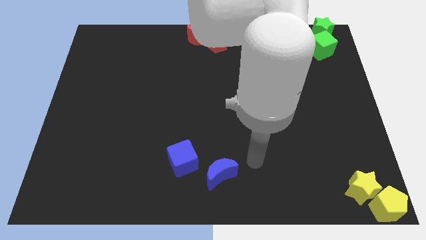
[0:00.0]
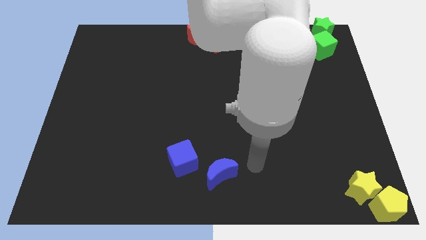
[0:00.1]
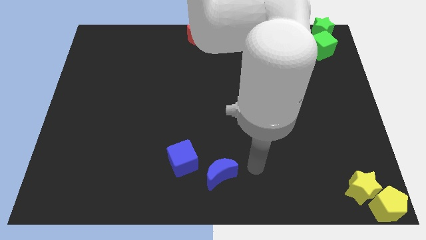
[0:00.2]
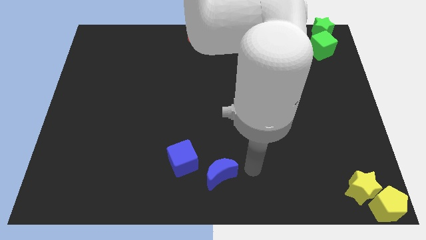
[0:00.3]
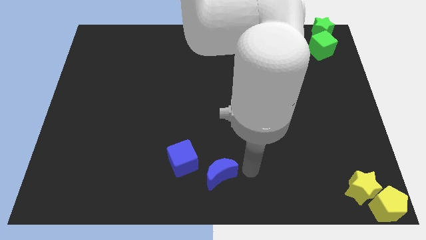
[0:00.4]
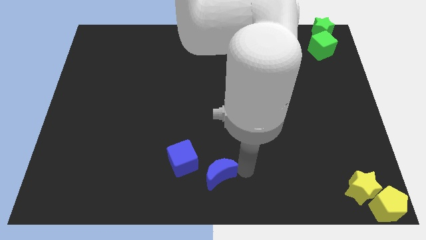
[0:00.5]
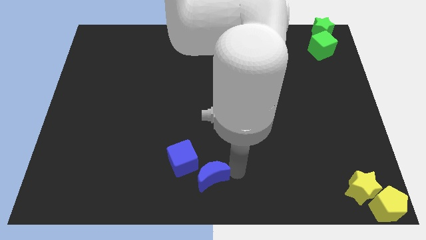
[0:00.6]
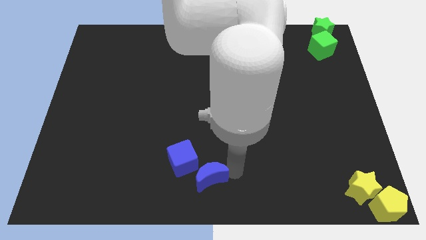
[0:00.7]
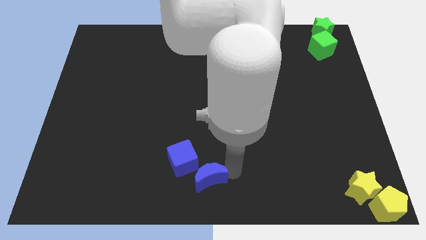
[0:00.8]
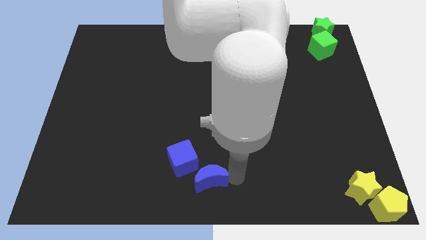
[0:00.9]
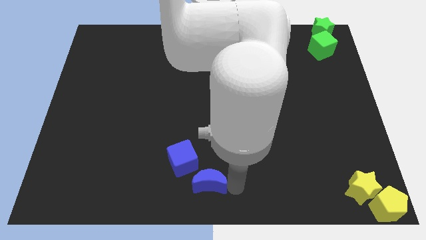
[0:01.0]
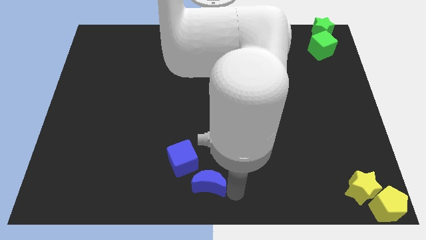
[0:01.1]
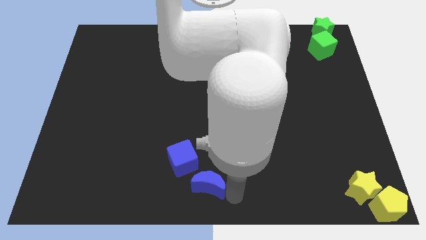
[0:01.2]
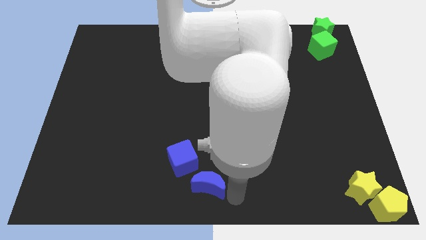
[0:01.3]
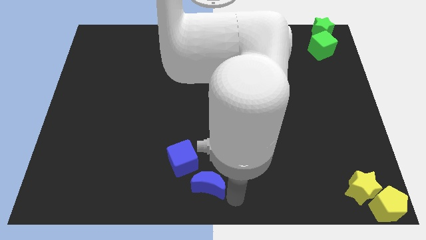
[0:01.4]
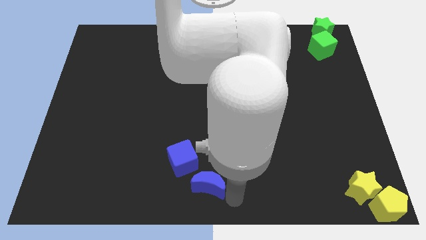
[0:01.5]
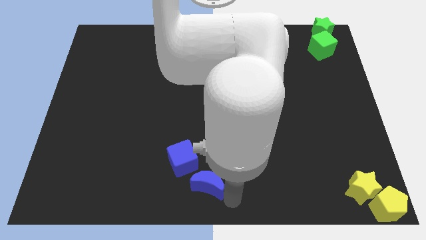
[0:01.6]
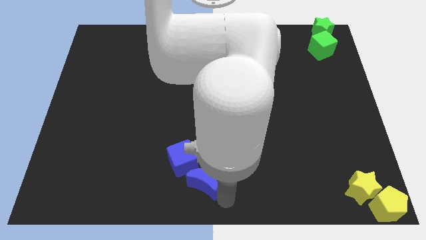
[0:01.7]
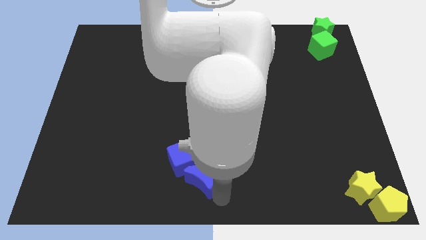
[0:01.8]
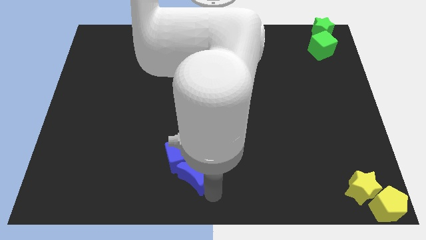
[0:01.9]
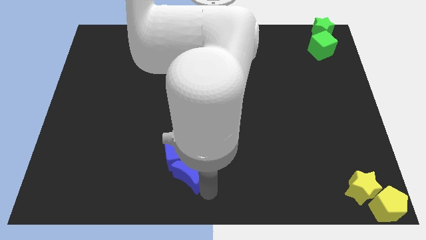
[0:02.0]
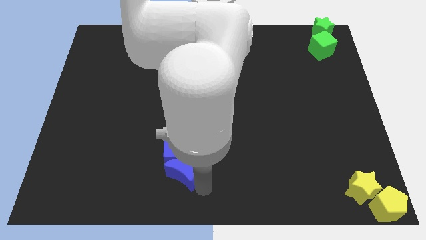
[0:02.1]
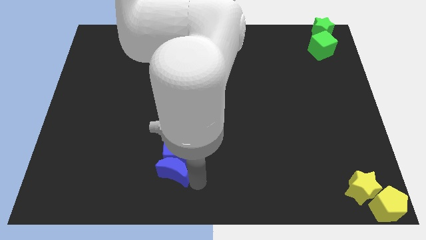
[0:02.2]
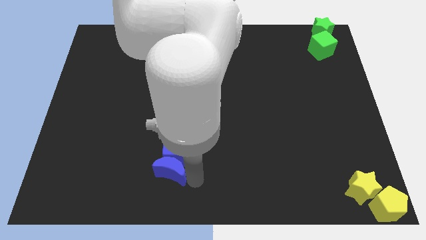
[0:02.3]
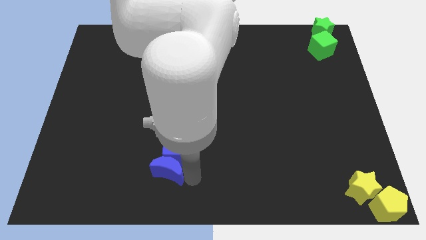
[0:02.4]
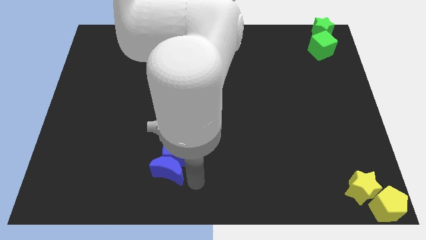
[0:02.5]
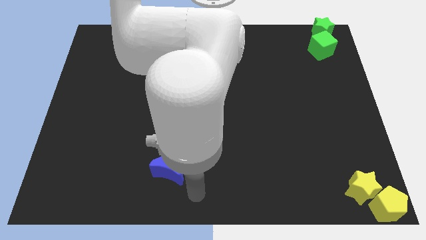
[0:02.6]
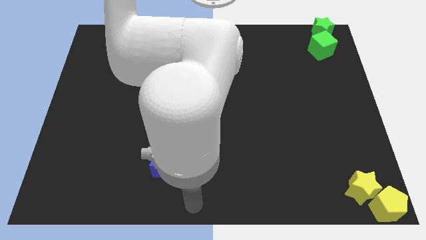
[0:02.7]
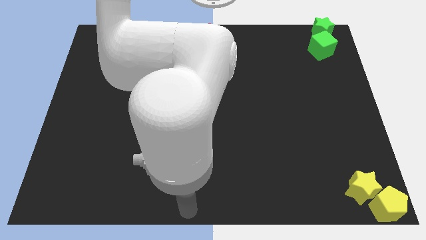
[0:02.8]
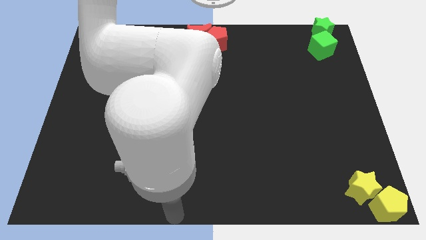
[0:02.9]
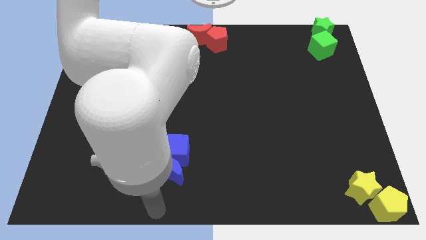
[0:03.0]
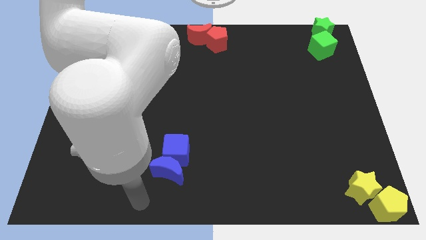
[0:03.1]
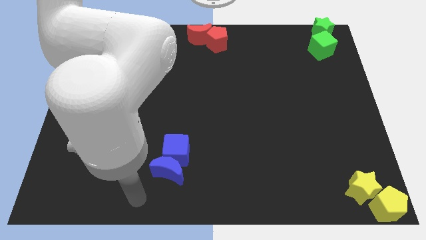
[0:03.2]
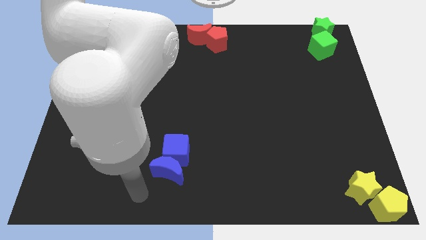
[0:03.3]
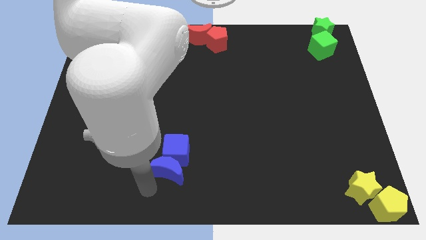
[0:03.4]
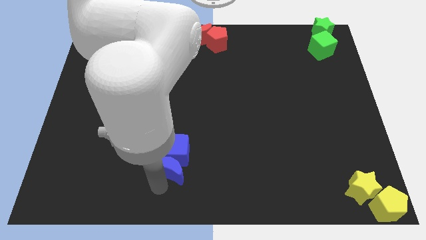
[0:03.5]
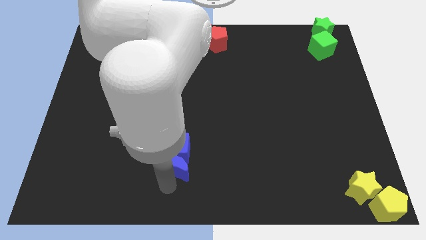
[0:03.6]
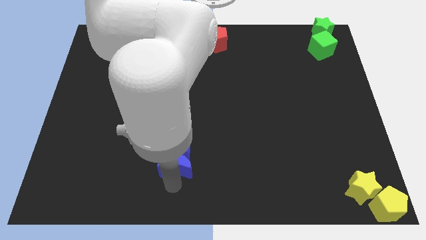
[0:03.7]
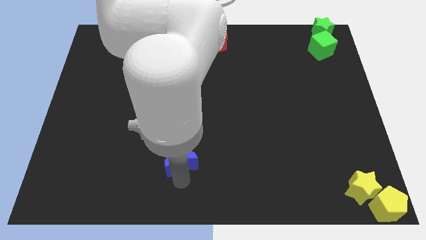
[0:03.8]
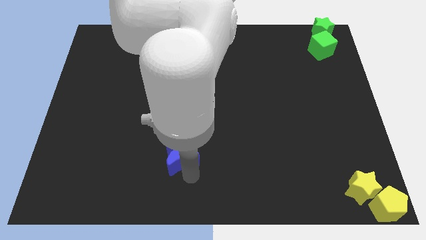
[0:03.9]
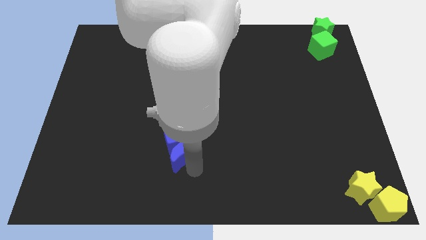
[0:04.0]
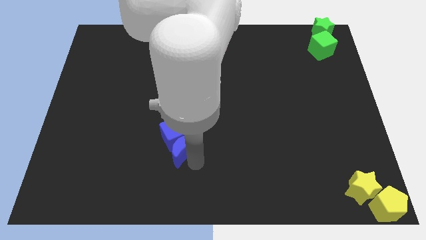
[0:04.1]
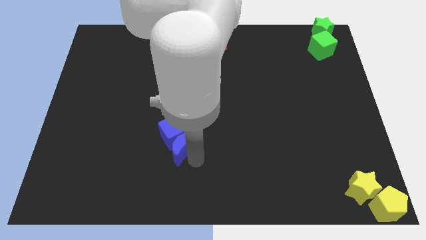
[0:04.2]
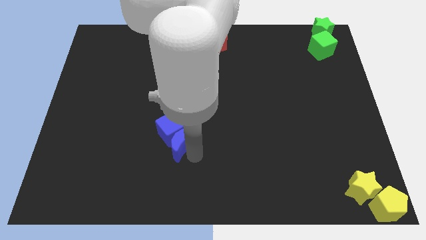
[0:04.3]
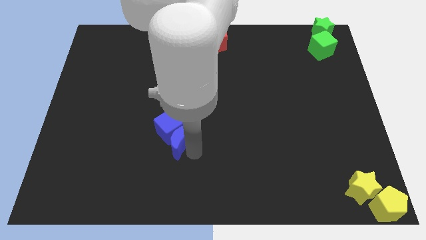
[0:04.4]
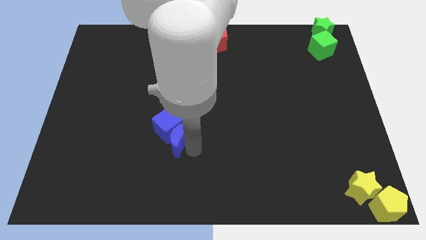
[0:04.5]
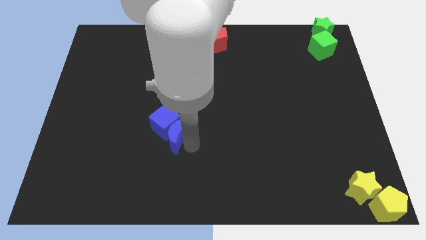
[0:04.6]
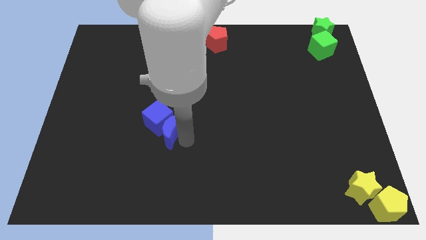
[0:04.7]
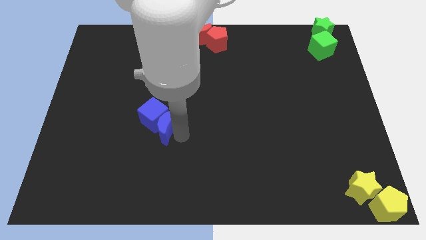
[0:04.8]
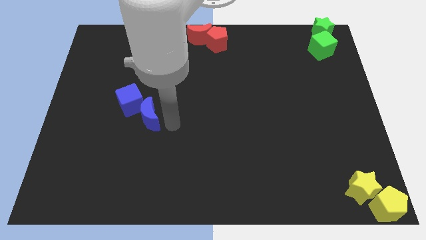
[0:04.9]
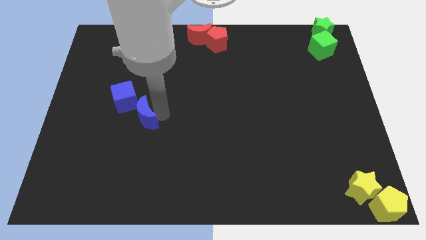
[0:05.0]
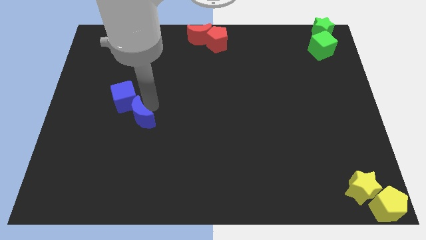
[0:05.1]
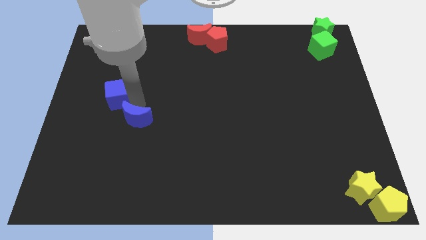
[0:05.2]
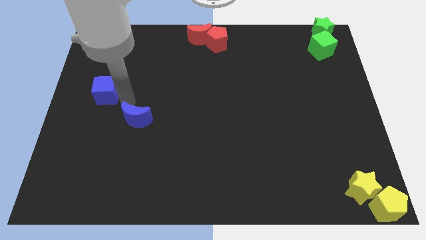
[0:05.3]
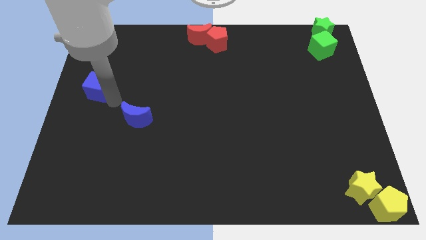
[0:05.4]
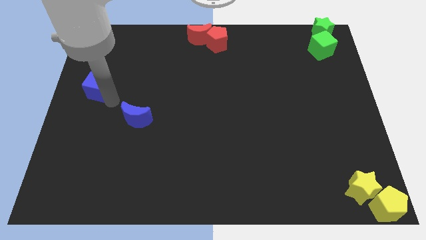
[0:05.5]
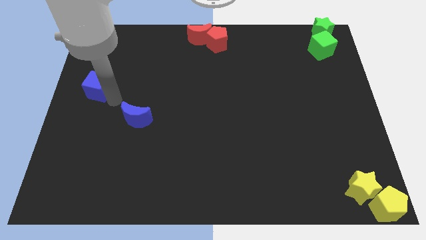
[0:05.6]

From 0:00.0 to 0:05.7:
separate the blue blocks

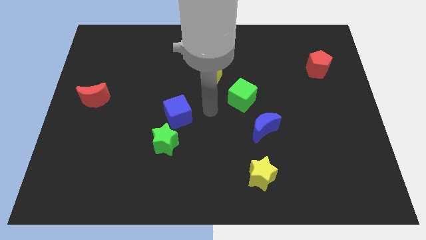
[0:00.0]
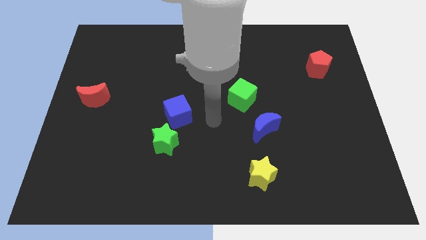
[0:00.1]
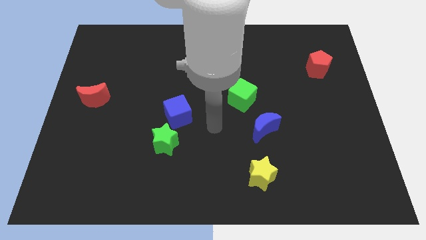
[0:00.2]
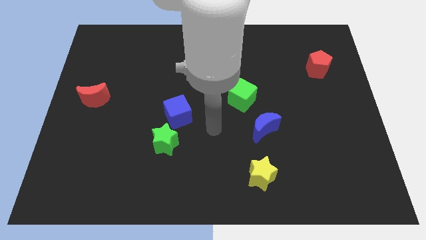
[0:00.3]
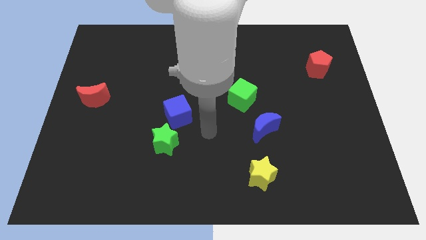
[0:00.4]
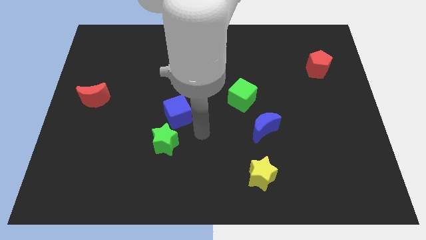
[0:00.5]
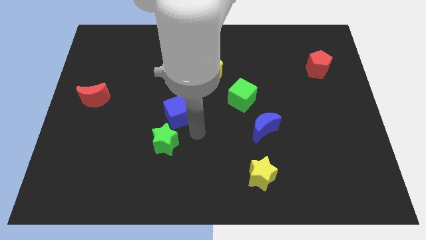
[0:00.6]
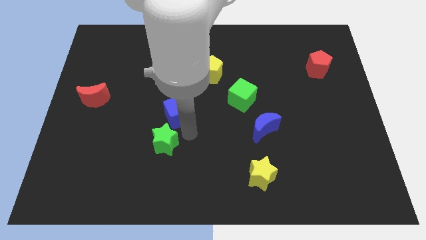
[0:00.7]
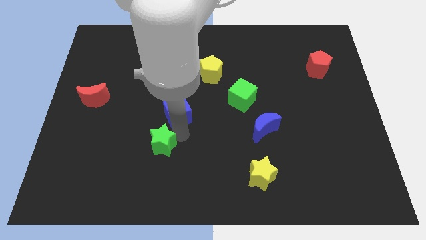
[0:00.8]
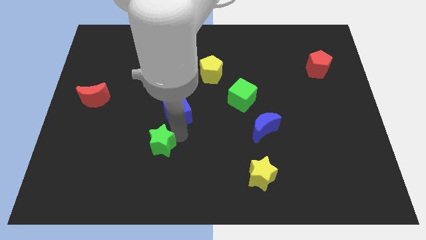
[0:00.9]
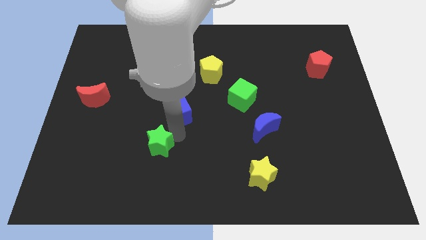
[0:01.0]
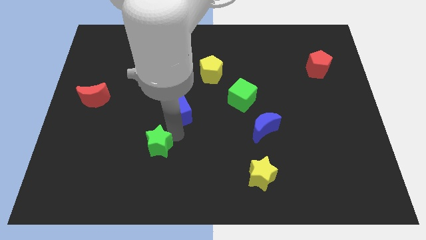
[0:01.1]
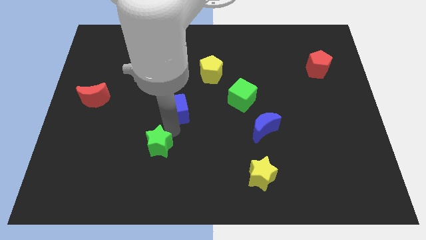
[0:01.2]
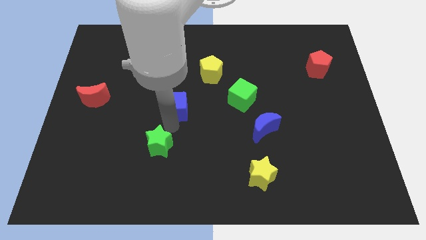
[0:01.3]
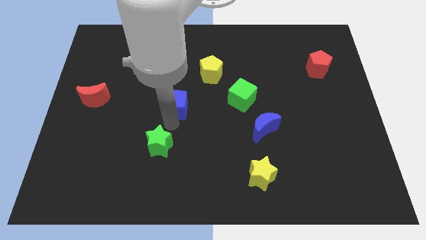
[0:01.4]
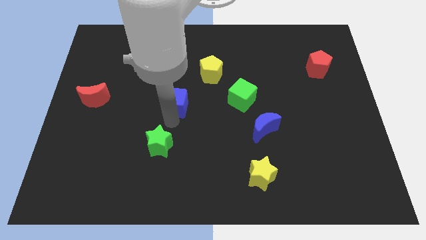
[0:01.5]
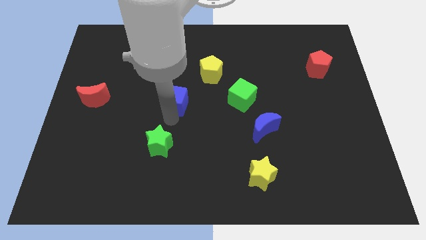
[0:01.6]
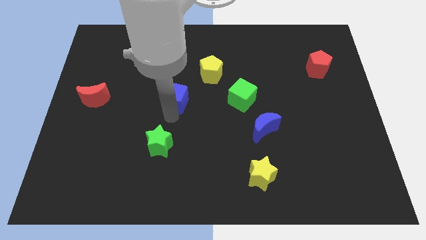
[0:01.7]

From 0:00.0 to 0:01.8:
separate the blue cube from the green star

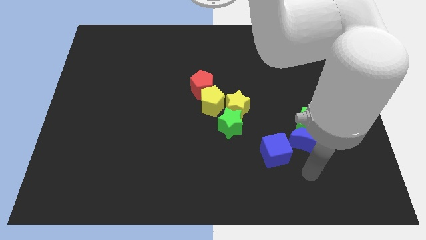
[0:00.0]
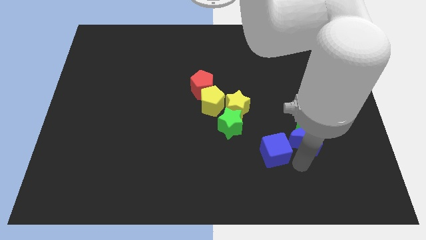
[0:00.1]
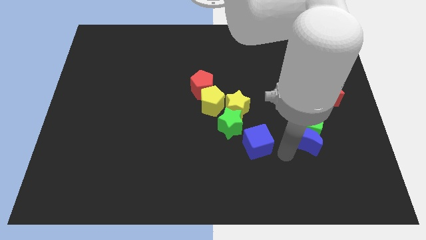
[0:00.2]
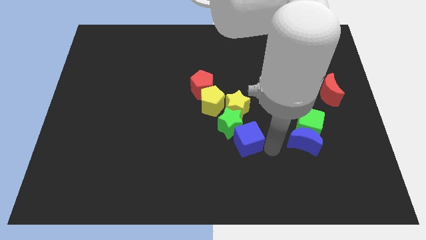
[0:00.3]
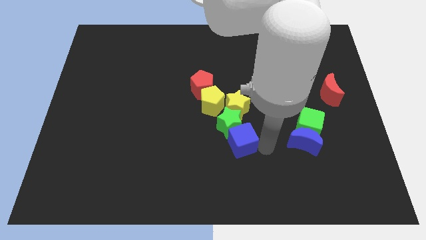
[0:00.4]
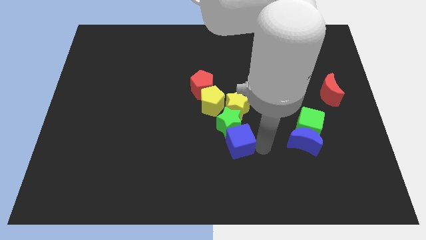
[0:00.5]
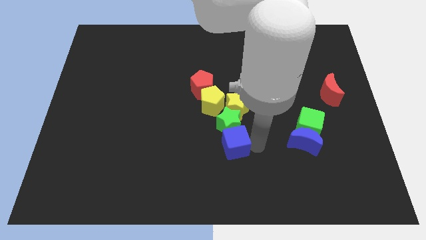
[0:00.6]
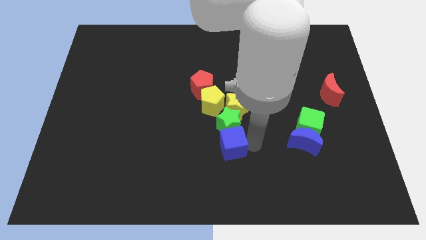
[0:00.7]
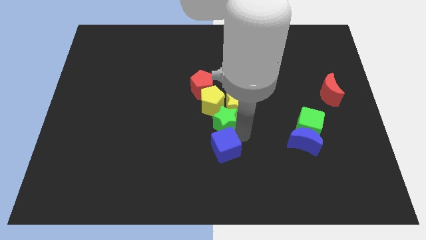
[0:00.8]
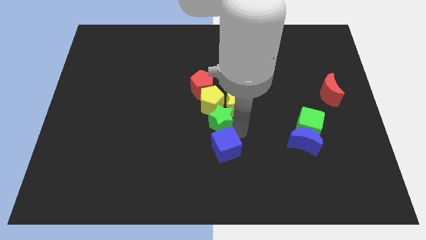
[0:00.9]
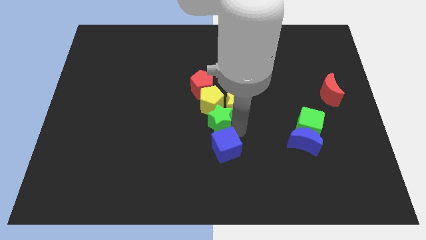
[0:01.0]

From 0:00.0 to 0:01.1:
place the blue cube at the bottom of the green star

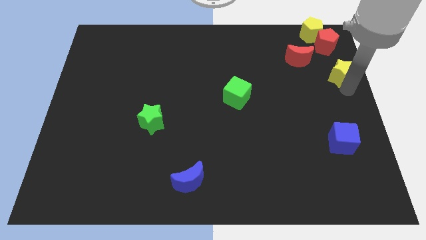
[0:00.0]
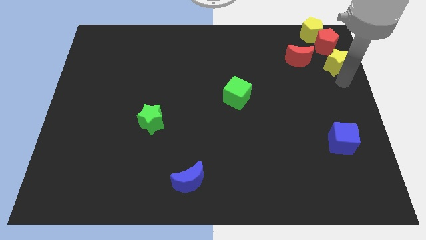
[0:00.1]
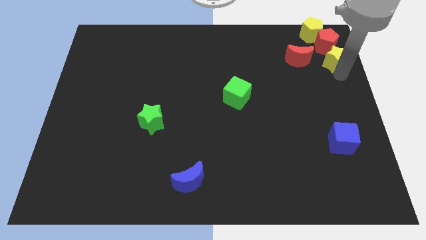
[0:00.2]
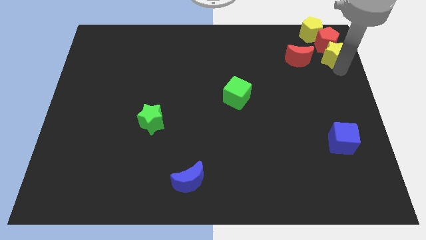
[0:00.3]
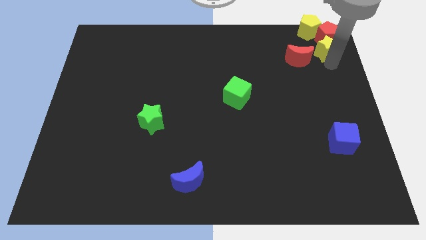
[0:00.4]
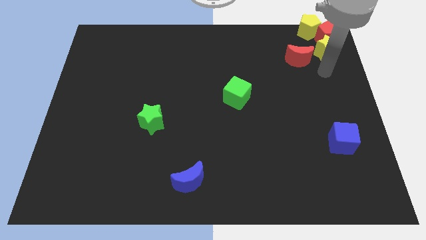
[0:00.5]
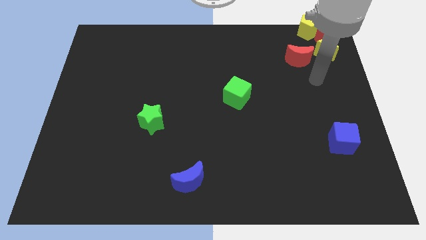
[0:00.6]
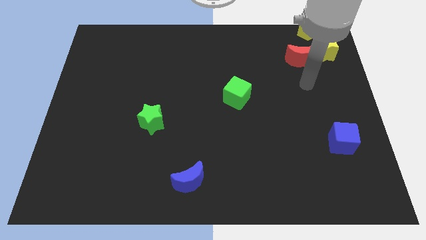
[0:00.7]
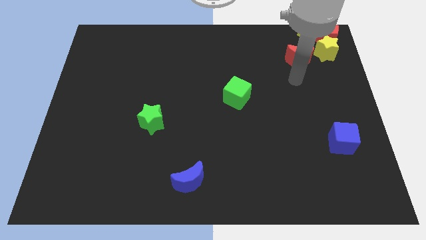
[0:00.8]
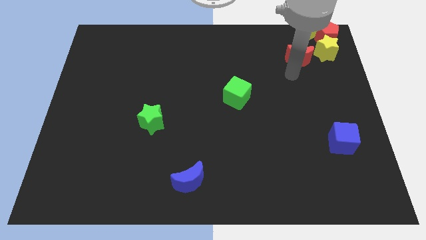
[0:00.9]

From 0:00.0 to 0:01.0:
push the yellow star into the red pentagon
